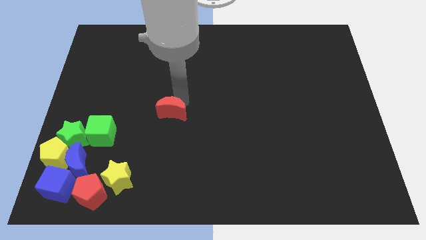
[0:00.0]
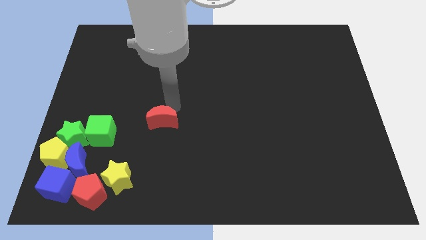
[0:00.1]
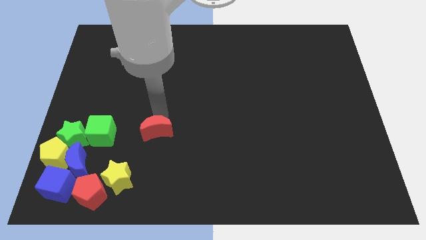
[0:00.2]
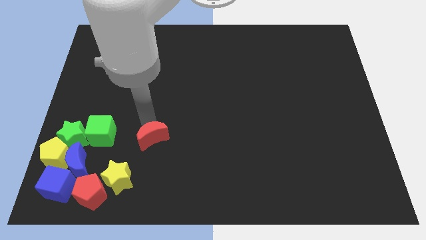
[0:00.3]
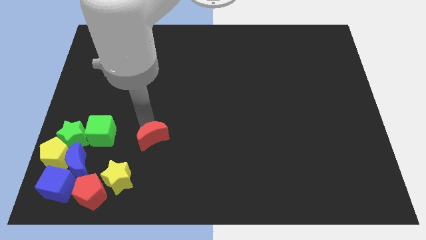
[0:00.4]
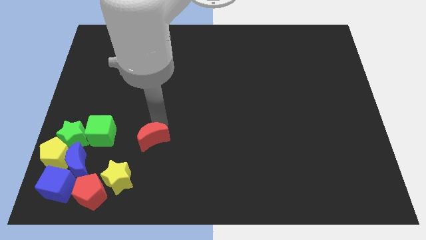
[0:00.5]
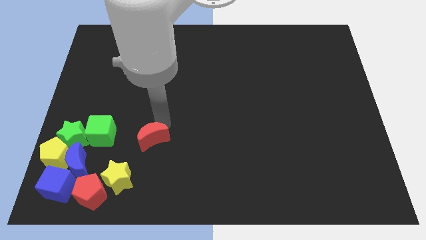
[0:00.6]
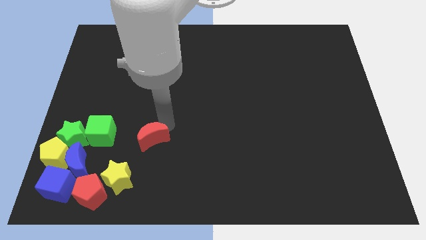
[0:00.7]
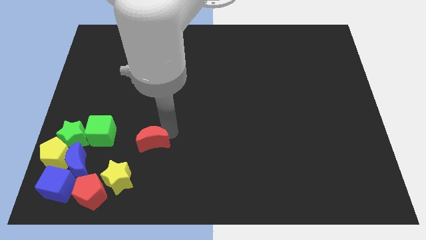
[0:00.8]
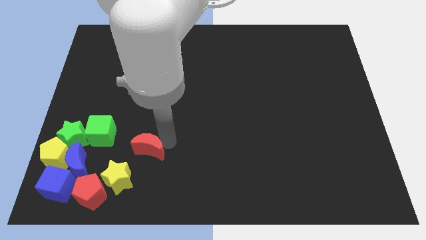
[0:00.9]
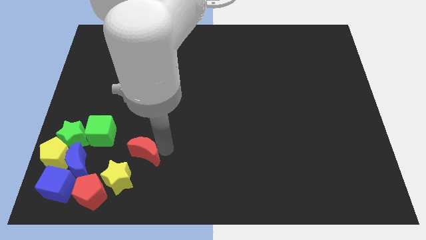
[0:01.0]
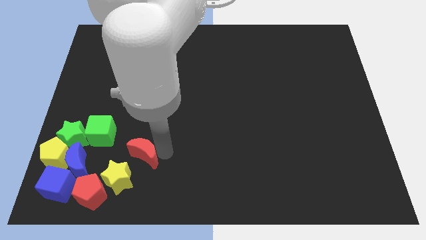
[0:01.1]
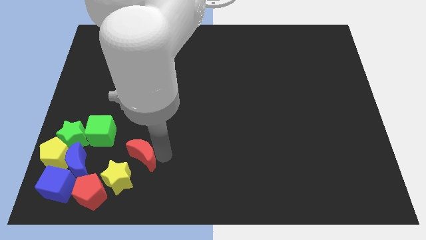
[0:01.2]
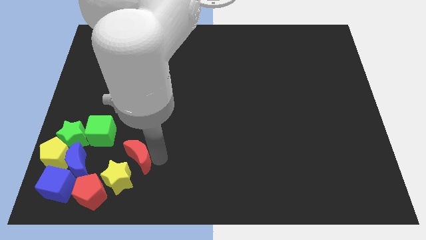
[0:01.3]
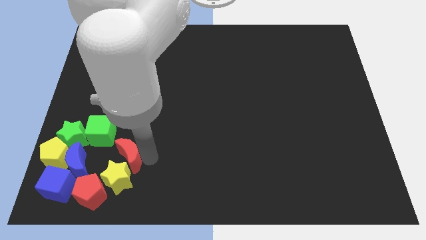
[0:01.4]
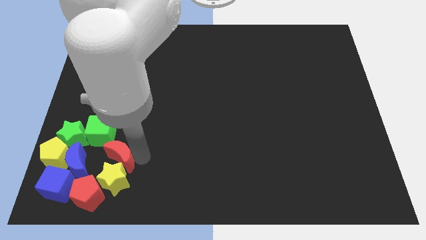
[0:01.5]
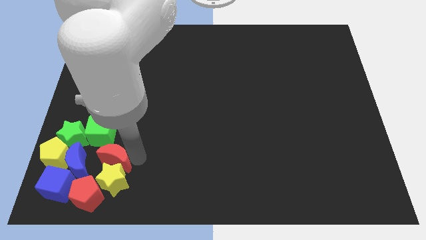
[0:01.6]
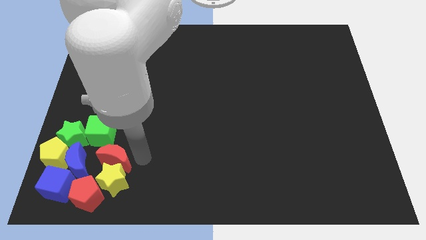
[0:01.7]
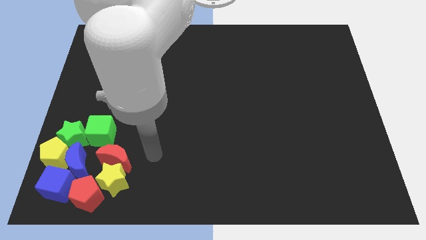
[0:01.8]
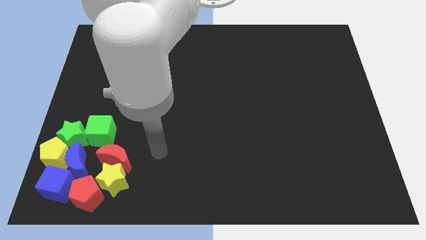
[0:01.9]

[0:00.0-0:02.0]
move the red crescent towards the group of blocks

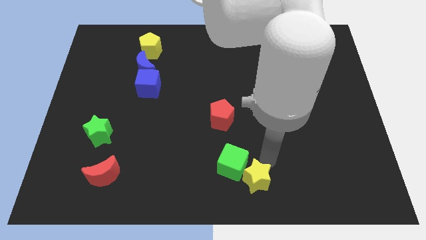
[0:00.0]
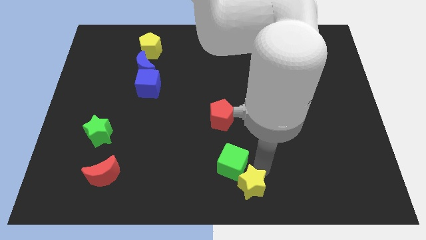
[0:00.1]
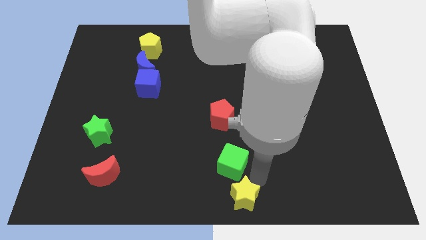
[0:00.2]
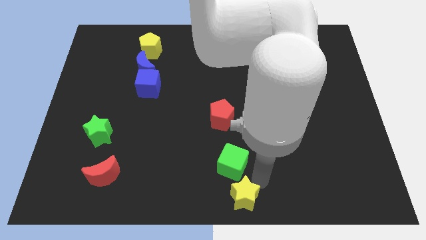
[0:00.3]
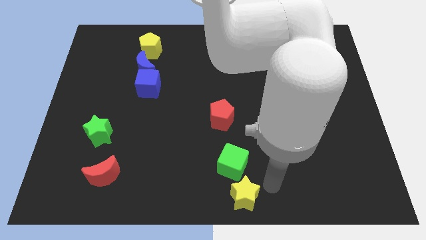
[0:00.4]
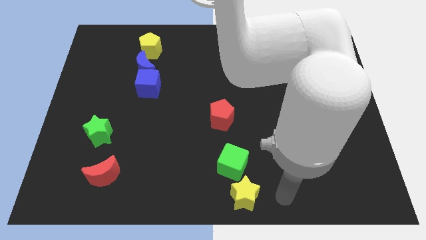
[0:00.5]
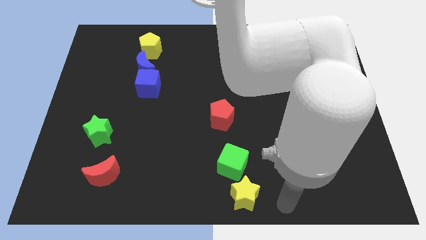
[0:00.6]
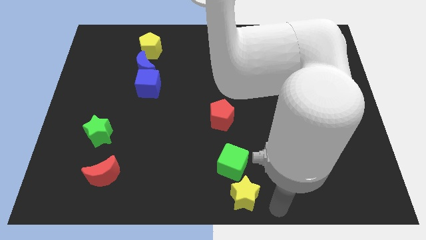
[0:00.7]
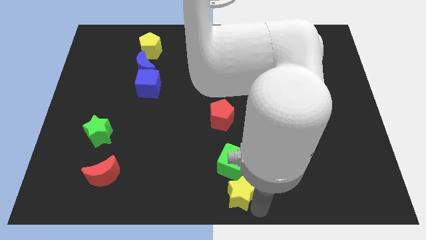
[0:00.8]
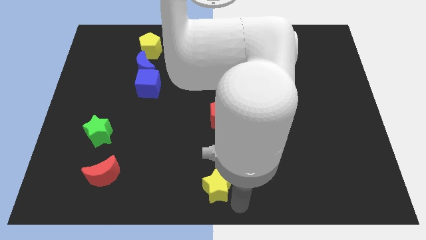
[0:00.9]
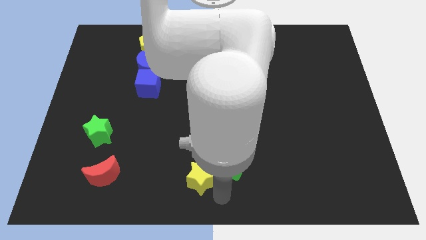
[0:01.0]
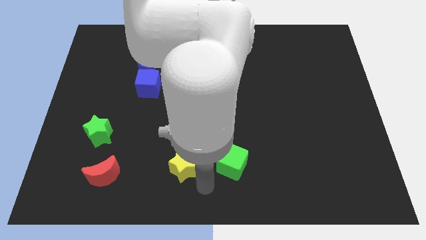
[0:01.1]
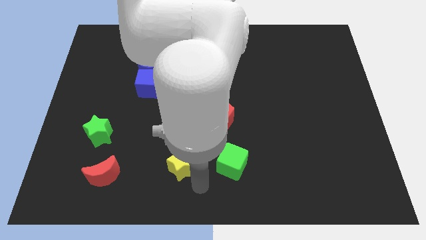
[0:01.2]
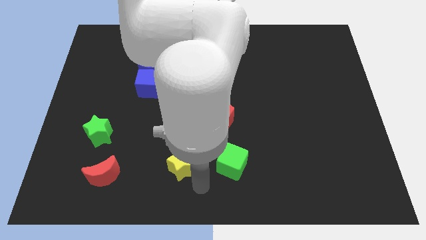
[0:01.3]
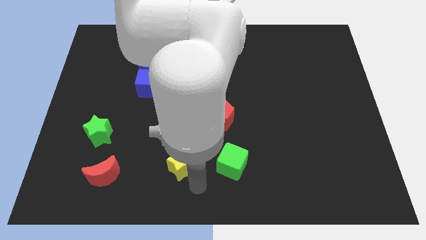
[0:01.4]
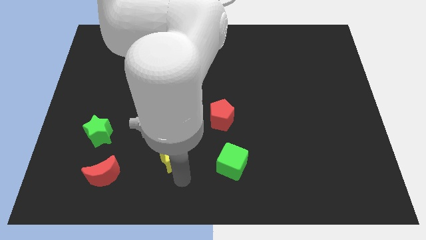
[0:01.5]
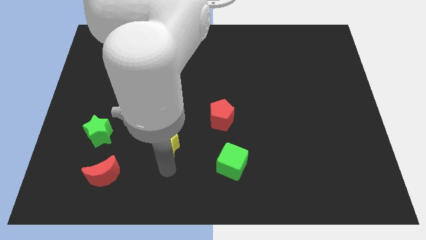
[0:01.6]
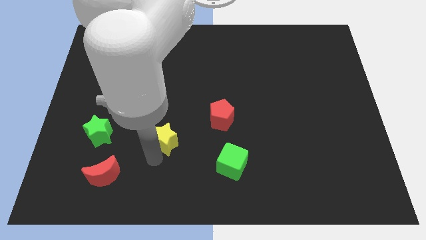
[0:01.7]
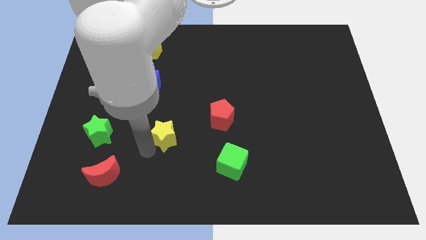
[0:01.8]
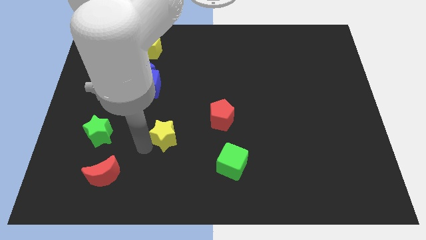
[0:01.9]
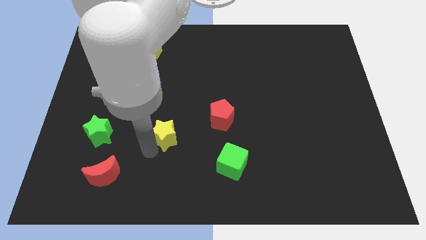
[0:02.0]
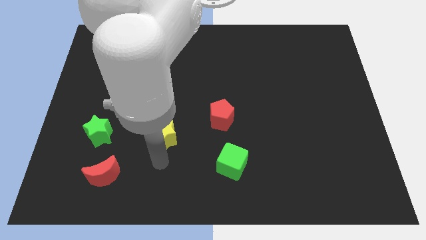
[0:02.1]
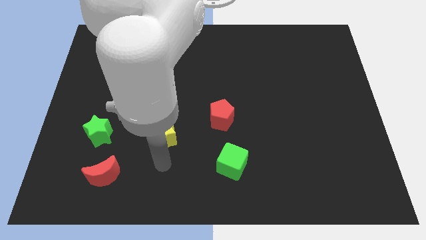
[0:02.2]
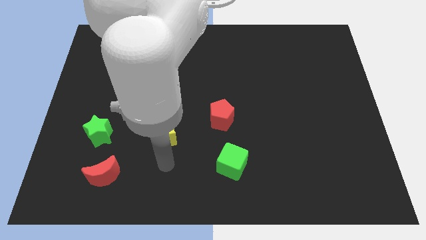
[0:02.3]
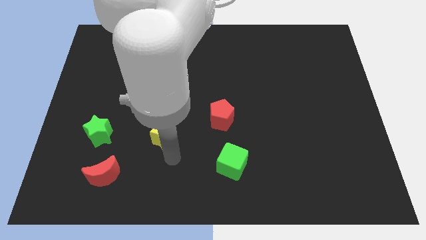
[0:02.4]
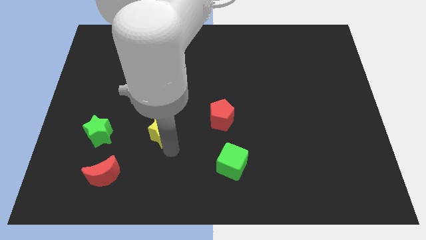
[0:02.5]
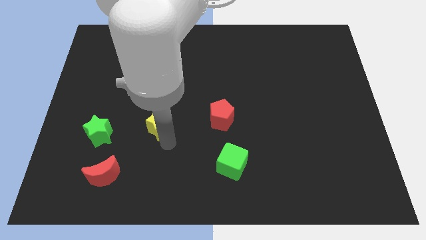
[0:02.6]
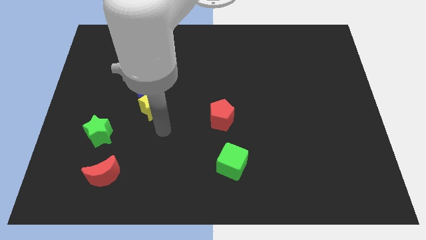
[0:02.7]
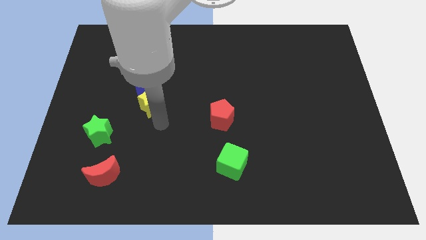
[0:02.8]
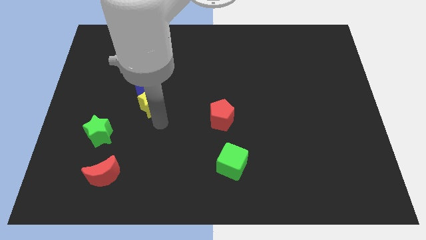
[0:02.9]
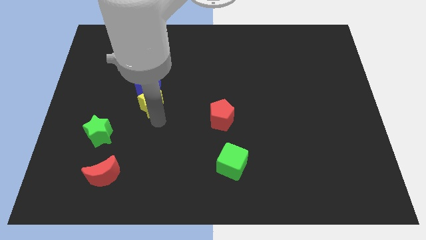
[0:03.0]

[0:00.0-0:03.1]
separate yellow star from green cube

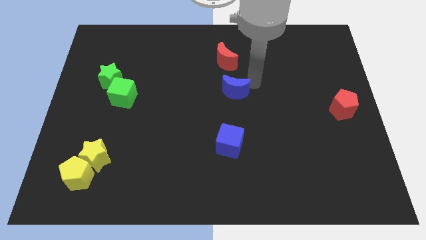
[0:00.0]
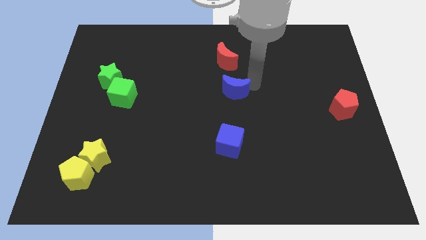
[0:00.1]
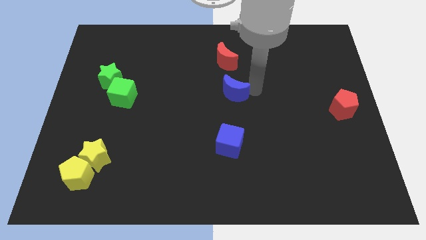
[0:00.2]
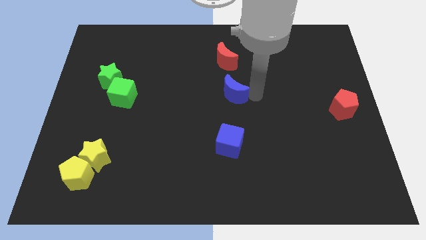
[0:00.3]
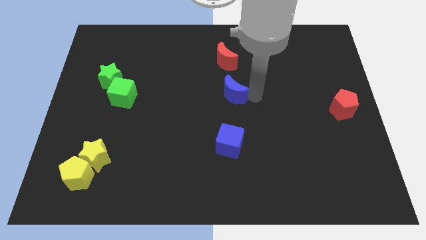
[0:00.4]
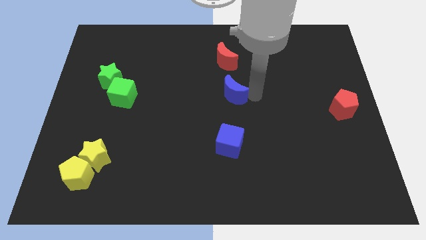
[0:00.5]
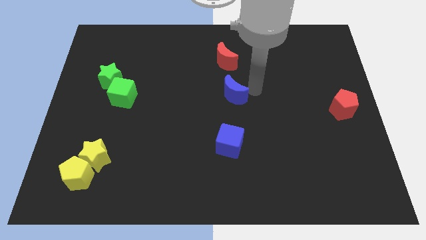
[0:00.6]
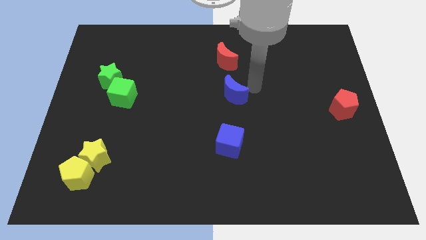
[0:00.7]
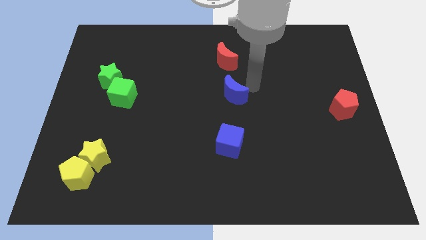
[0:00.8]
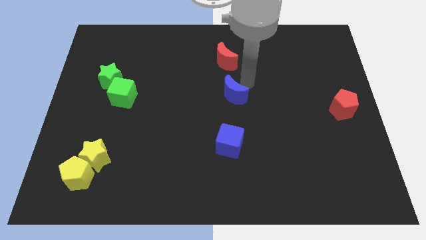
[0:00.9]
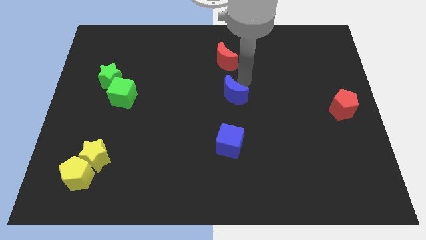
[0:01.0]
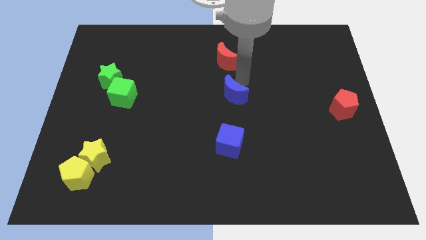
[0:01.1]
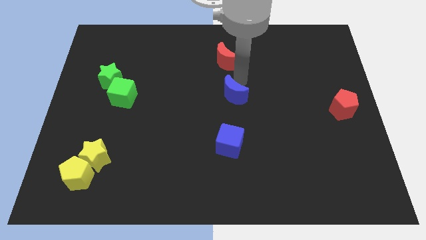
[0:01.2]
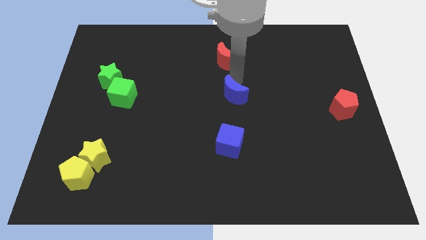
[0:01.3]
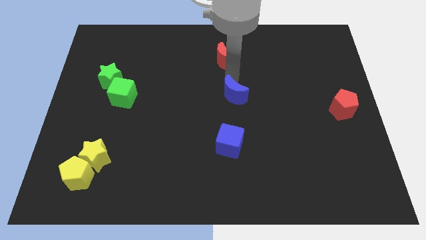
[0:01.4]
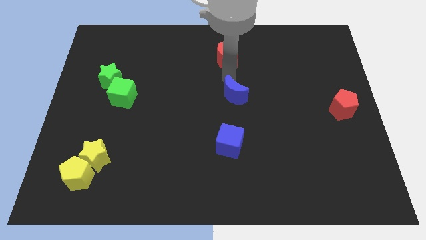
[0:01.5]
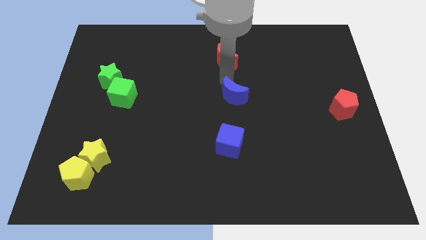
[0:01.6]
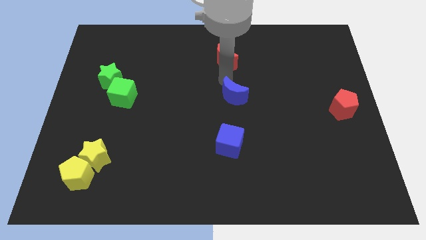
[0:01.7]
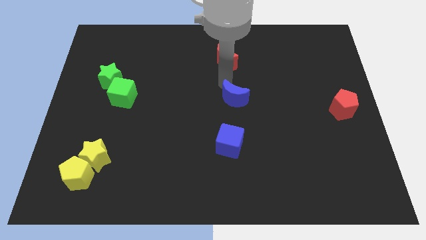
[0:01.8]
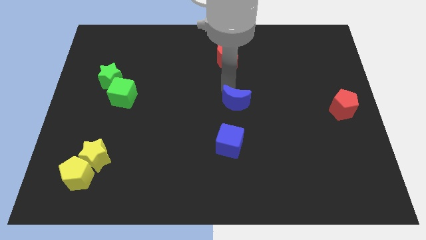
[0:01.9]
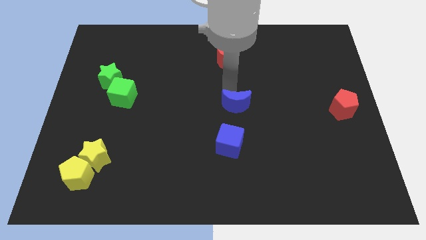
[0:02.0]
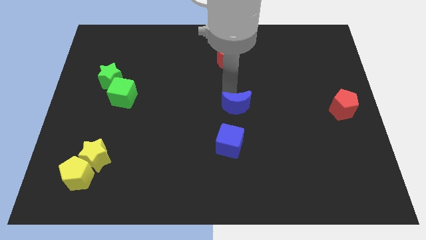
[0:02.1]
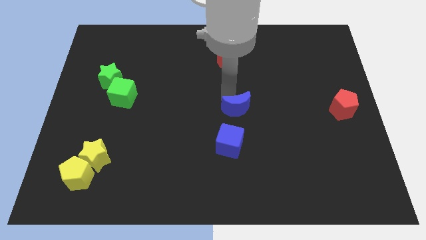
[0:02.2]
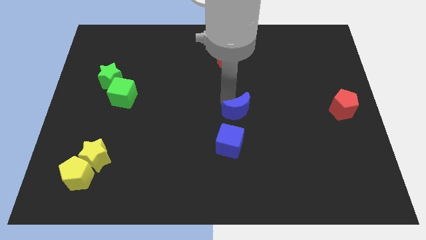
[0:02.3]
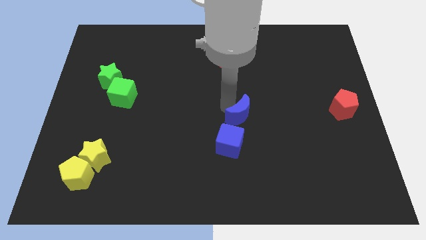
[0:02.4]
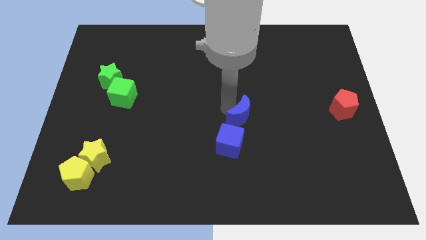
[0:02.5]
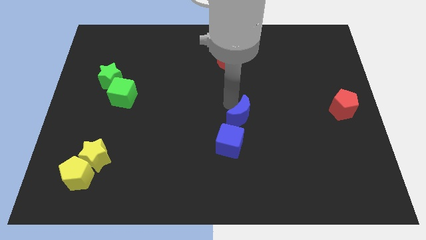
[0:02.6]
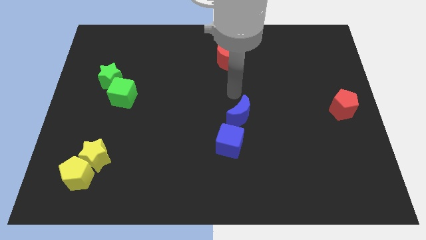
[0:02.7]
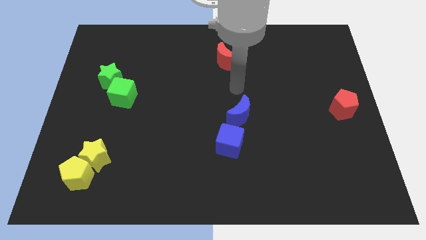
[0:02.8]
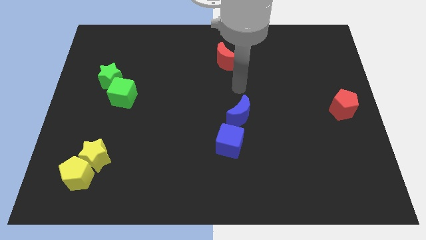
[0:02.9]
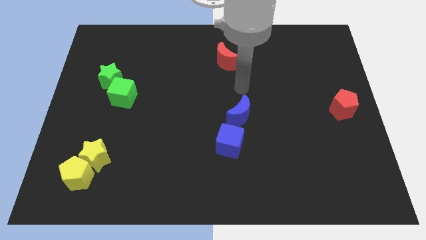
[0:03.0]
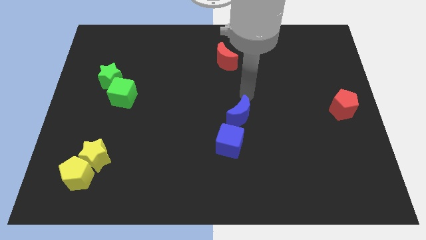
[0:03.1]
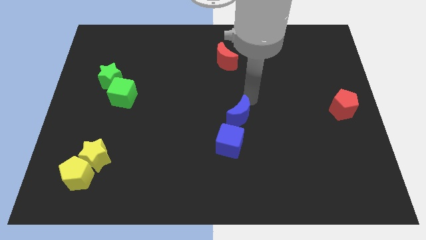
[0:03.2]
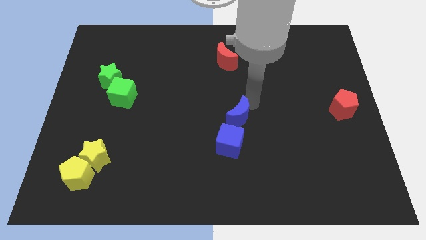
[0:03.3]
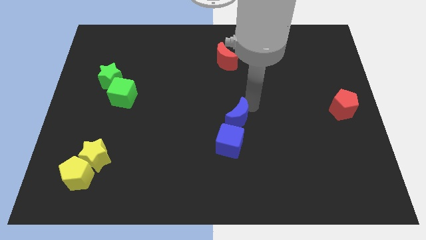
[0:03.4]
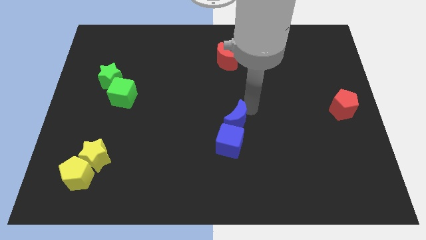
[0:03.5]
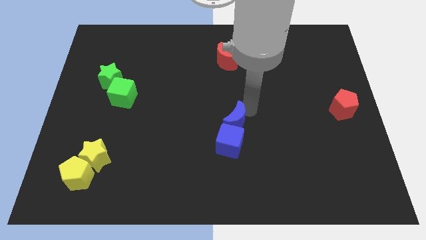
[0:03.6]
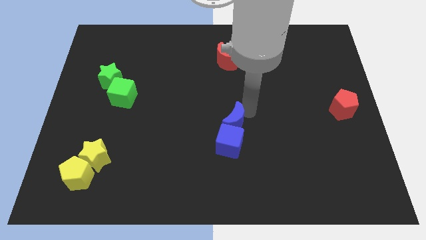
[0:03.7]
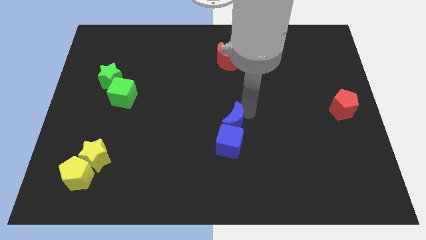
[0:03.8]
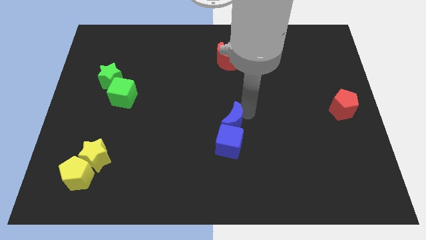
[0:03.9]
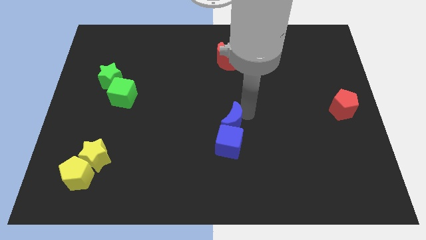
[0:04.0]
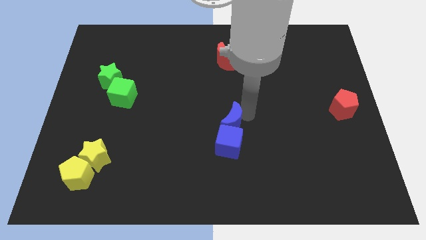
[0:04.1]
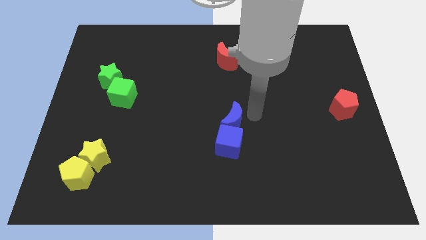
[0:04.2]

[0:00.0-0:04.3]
push the blue moon into the blue cube
